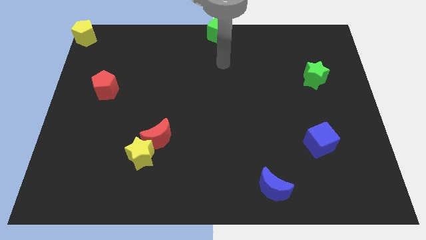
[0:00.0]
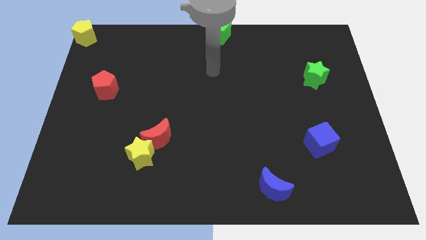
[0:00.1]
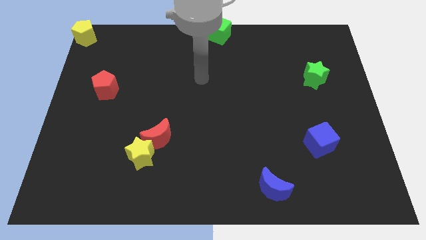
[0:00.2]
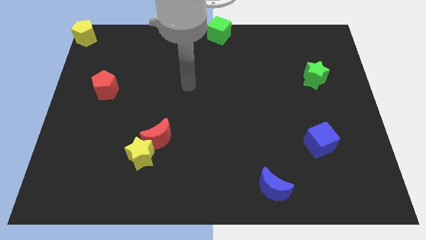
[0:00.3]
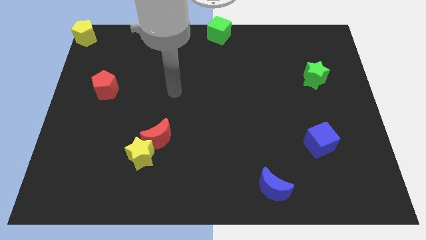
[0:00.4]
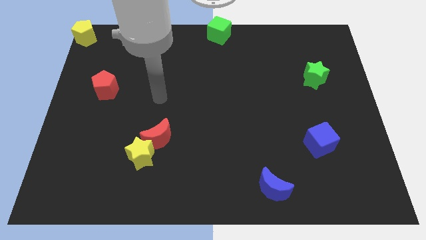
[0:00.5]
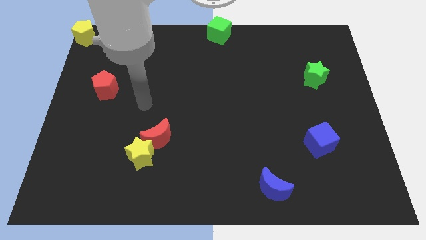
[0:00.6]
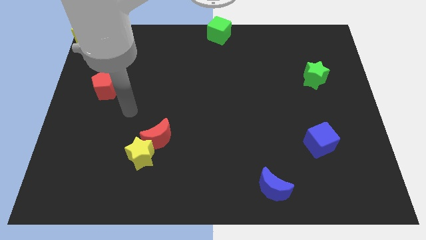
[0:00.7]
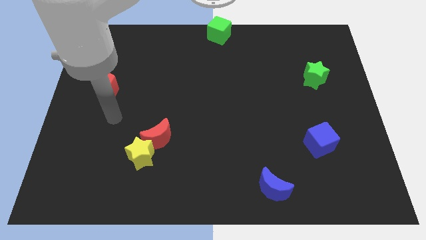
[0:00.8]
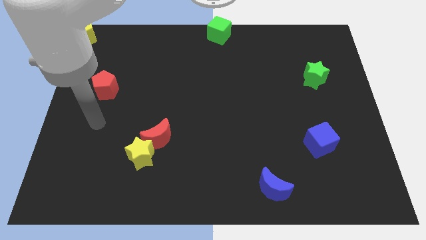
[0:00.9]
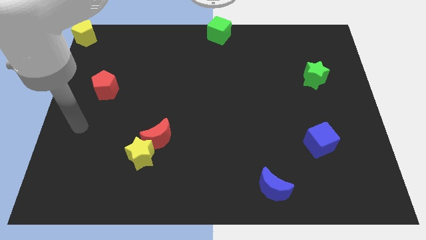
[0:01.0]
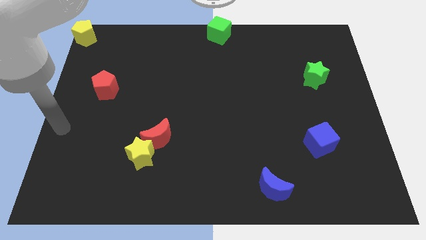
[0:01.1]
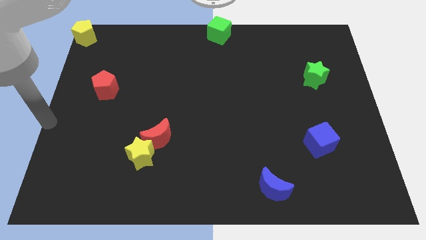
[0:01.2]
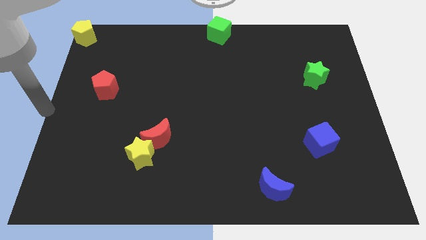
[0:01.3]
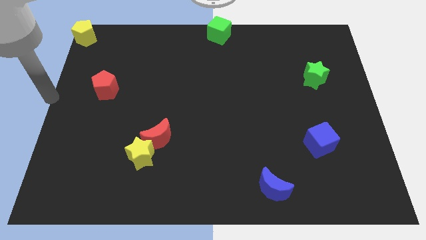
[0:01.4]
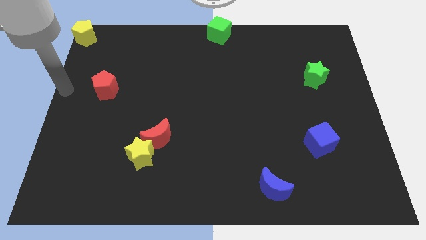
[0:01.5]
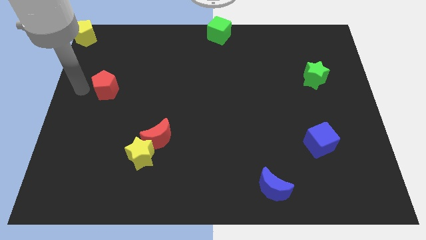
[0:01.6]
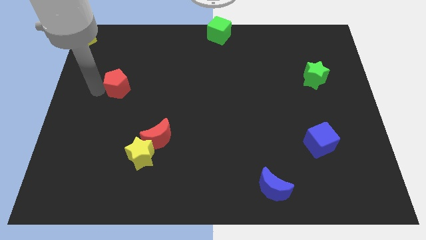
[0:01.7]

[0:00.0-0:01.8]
tap the red pentagon

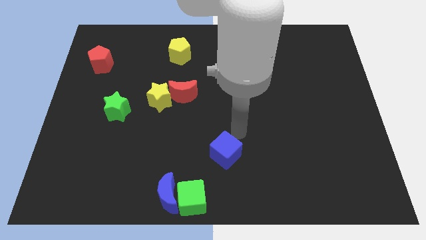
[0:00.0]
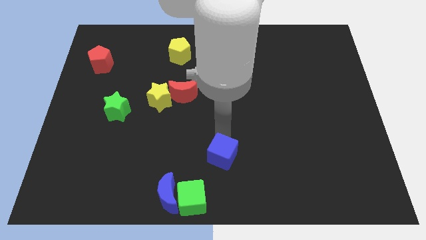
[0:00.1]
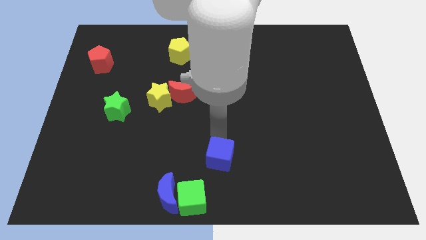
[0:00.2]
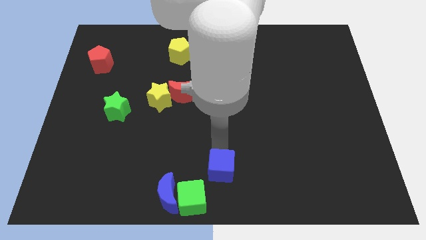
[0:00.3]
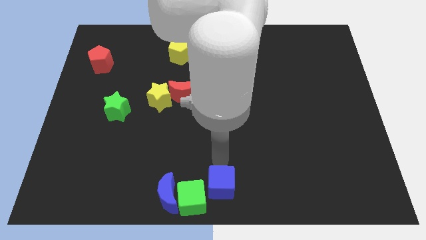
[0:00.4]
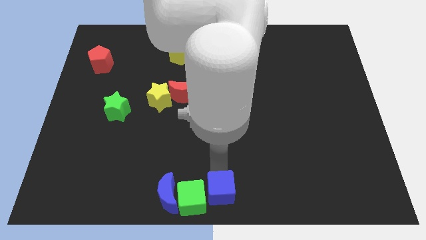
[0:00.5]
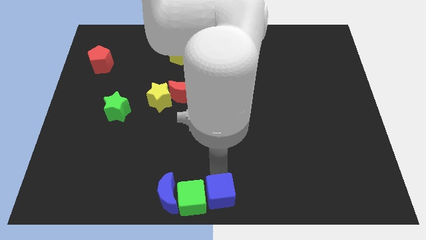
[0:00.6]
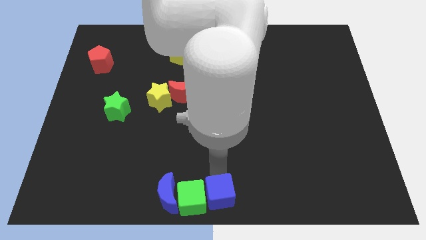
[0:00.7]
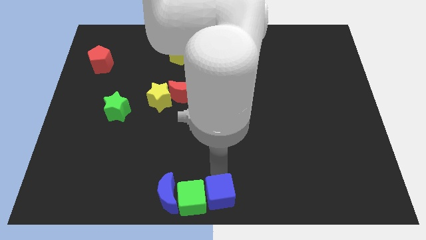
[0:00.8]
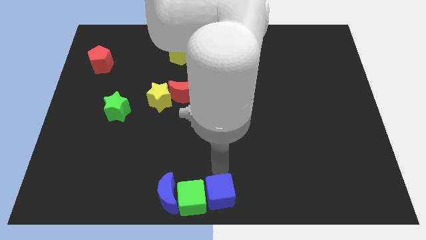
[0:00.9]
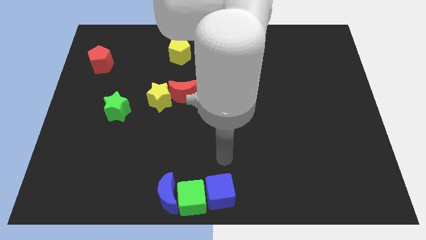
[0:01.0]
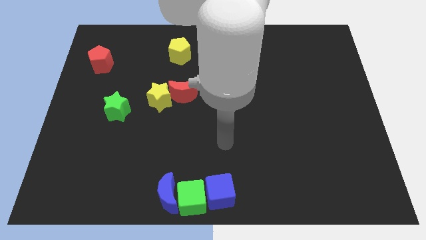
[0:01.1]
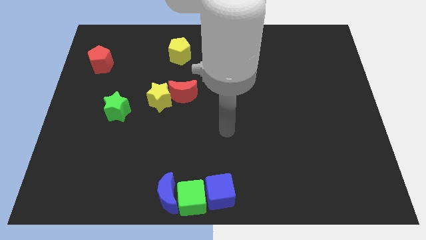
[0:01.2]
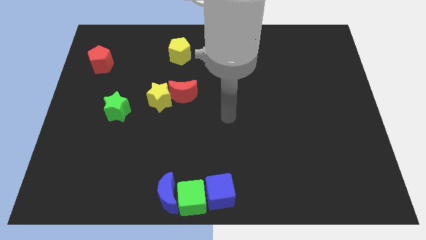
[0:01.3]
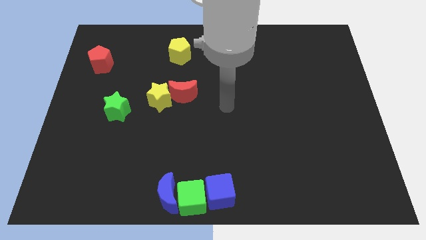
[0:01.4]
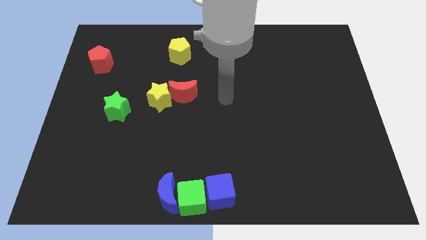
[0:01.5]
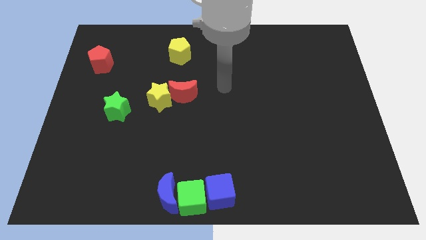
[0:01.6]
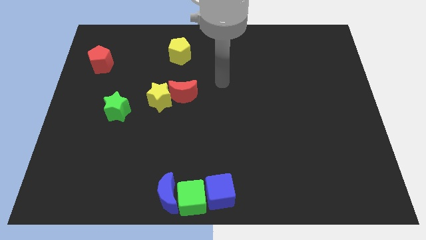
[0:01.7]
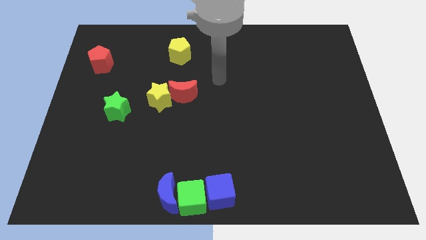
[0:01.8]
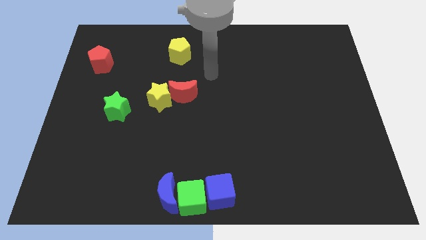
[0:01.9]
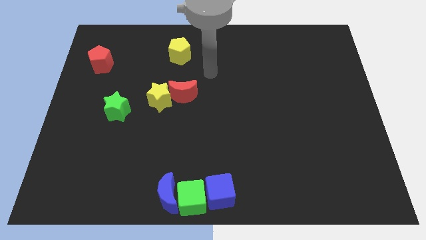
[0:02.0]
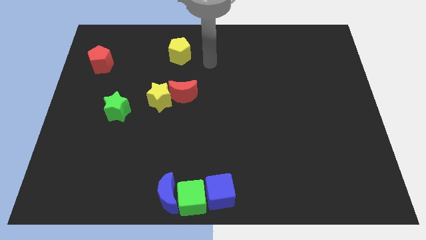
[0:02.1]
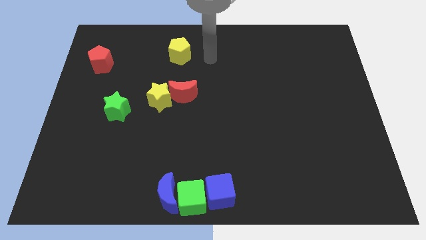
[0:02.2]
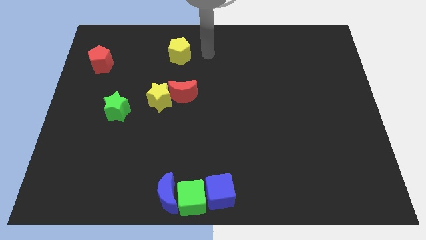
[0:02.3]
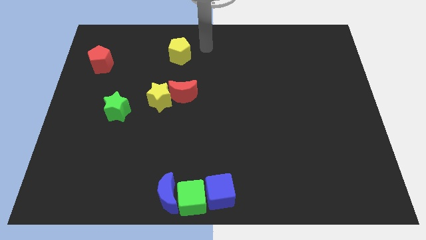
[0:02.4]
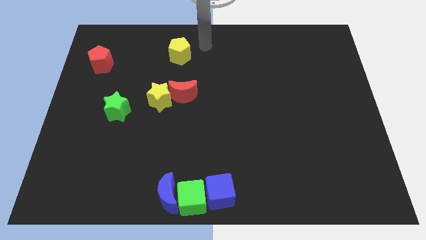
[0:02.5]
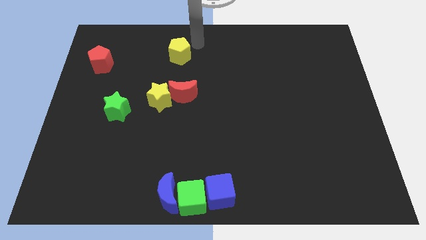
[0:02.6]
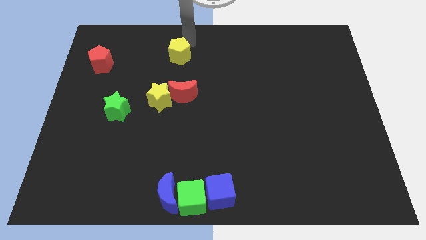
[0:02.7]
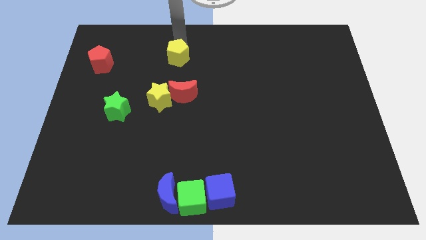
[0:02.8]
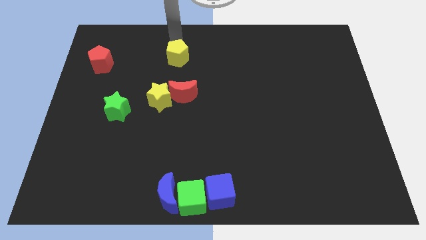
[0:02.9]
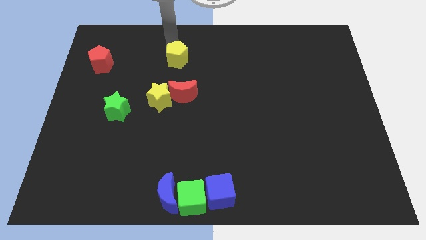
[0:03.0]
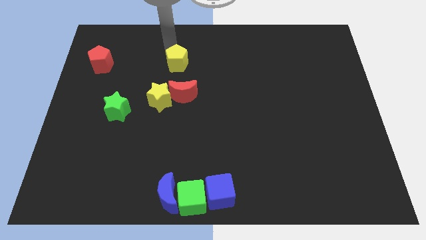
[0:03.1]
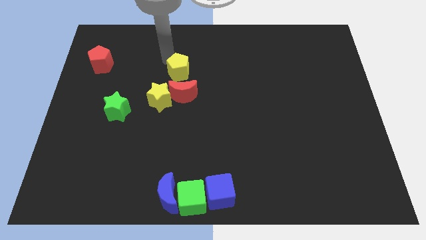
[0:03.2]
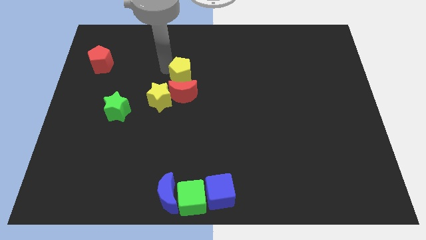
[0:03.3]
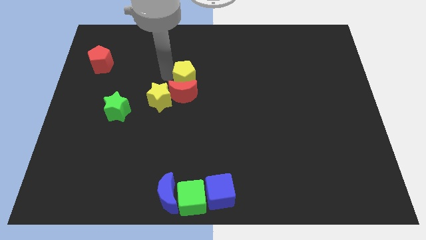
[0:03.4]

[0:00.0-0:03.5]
push the yellow pentagon close to the red crescent

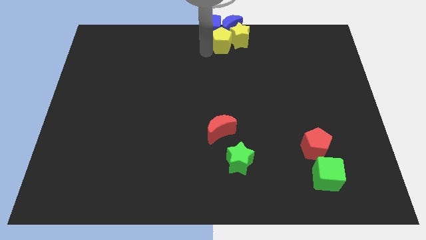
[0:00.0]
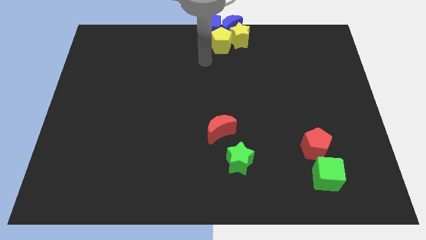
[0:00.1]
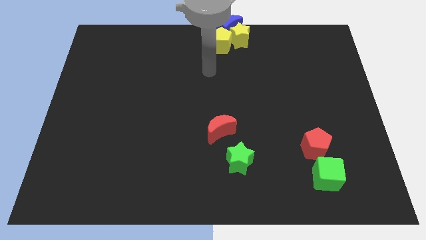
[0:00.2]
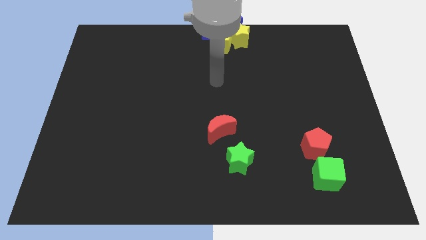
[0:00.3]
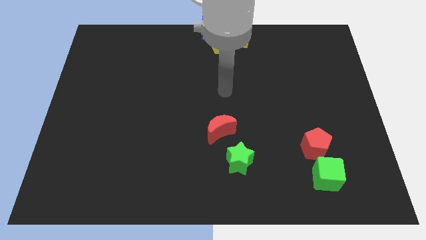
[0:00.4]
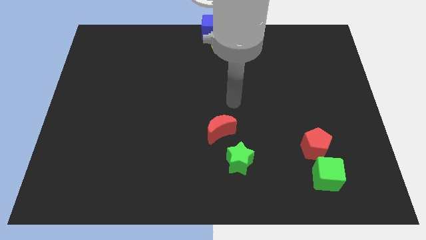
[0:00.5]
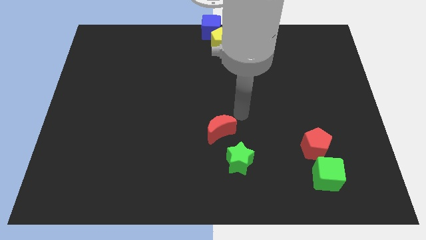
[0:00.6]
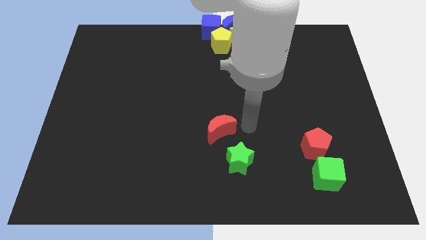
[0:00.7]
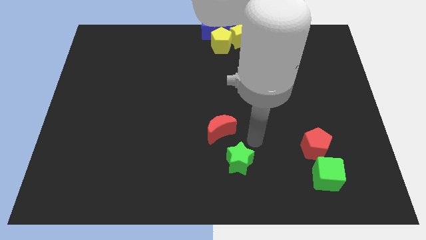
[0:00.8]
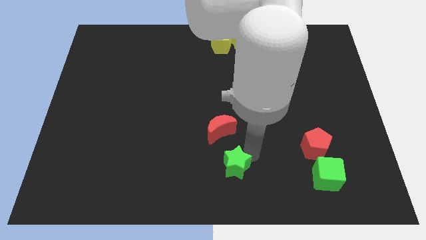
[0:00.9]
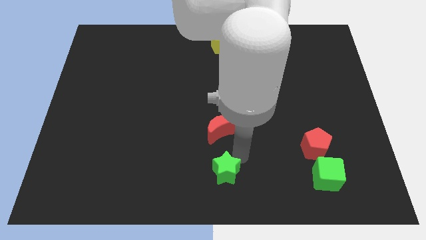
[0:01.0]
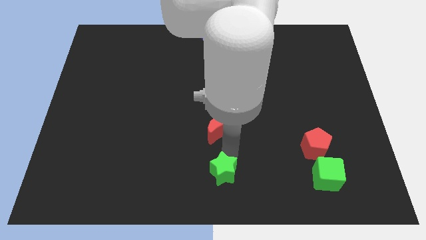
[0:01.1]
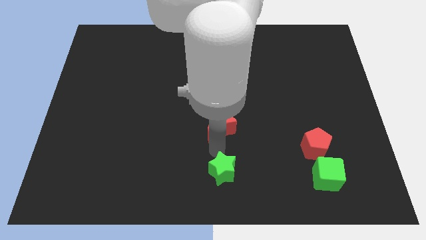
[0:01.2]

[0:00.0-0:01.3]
place your arm in between the green star and red crescent

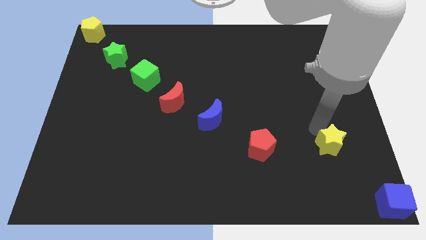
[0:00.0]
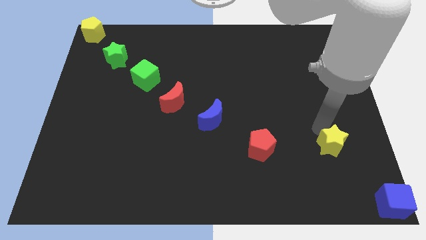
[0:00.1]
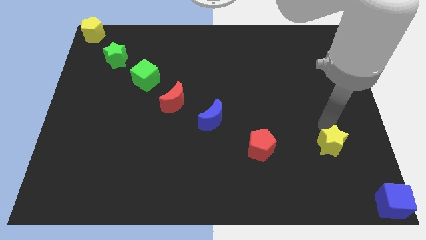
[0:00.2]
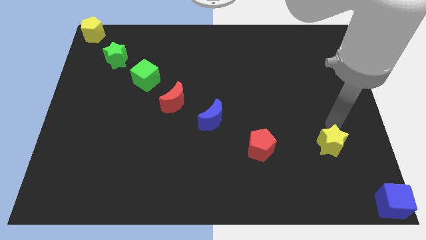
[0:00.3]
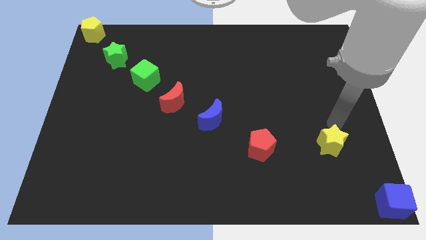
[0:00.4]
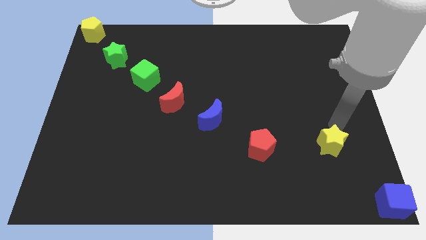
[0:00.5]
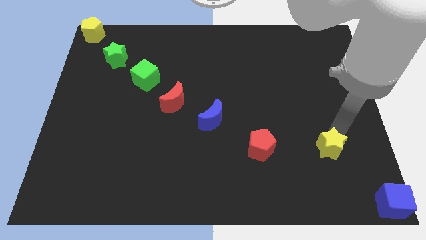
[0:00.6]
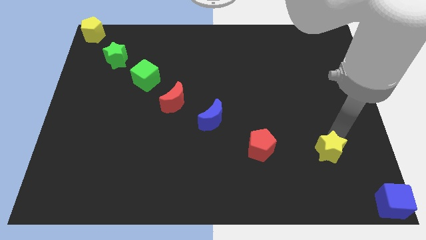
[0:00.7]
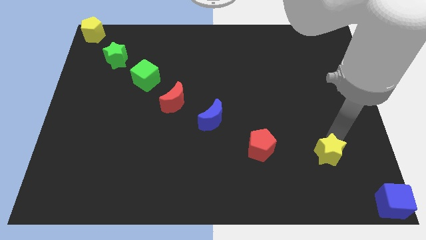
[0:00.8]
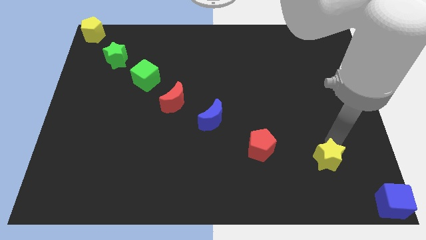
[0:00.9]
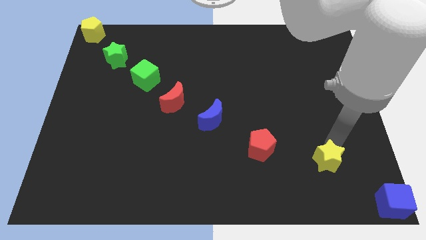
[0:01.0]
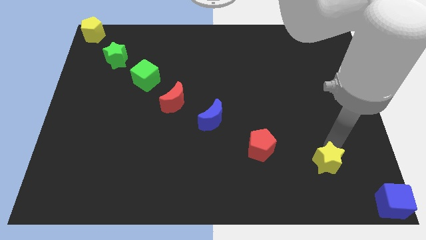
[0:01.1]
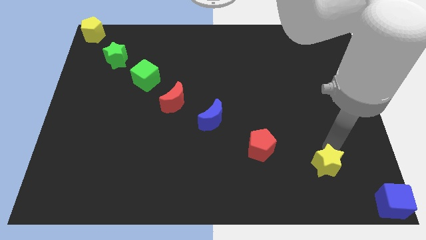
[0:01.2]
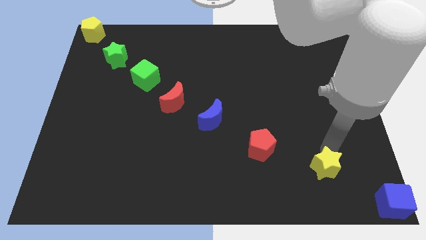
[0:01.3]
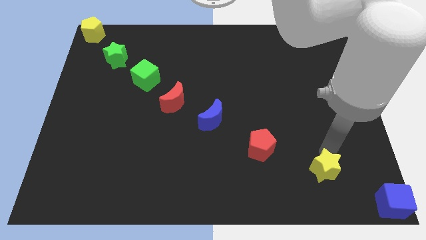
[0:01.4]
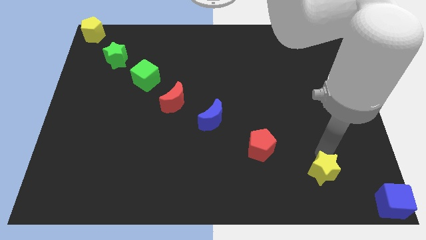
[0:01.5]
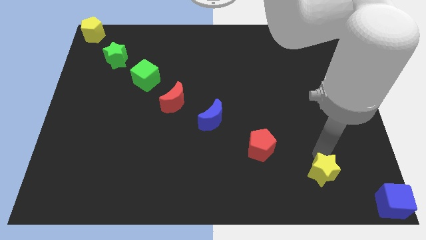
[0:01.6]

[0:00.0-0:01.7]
place the yellow star in between the red pentagon and the blue cube

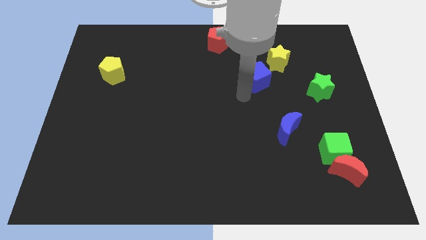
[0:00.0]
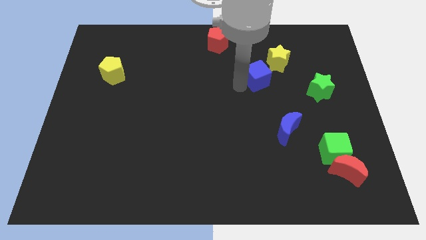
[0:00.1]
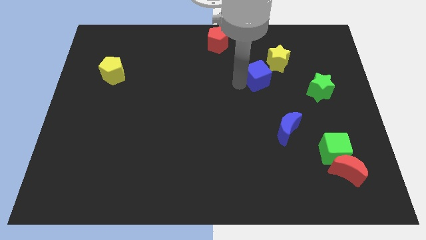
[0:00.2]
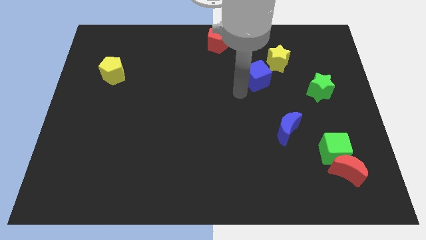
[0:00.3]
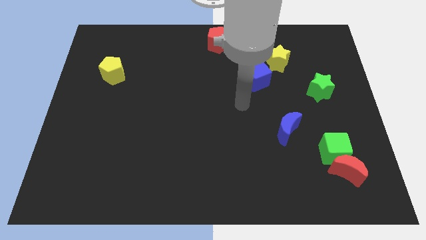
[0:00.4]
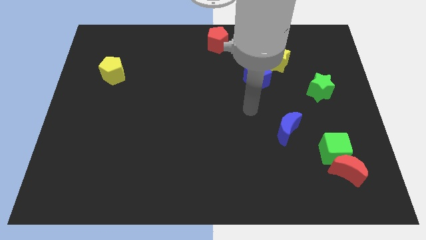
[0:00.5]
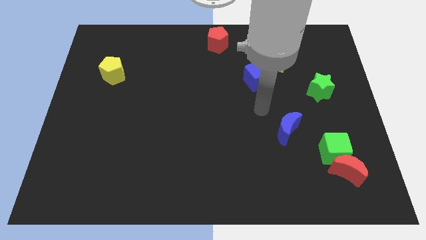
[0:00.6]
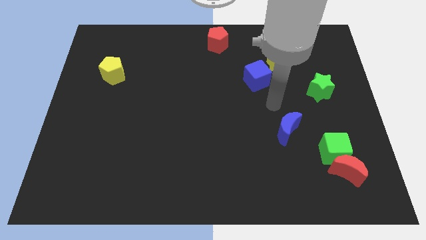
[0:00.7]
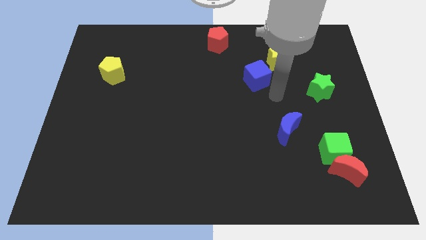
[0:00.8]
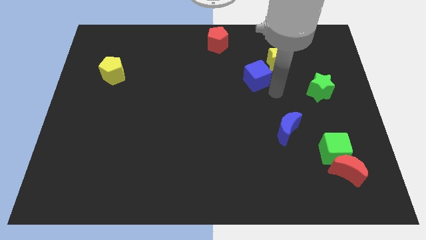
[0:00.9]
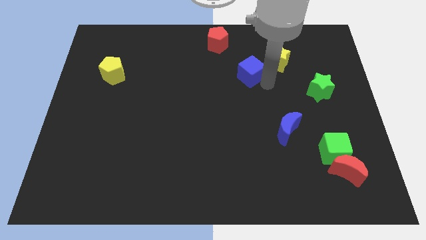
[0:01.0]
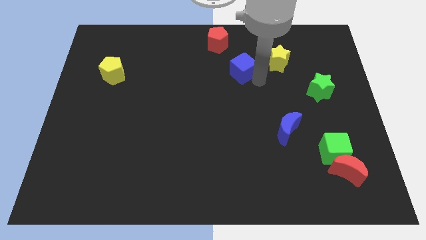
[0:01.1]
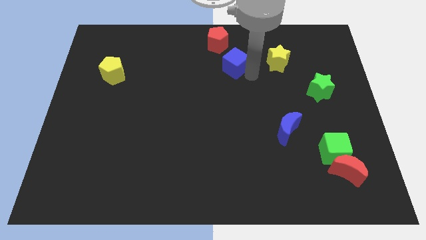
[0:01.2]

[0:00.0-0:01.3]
move the blue cube closer to the red pentagon
